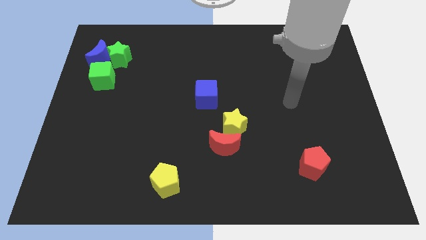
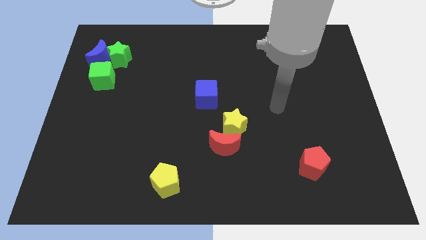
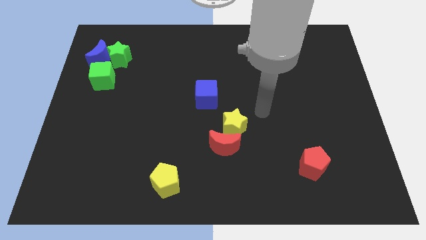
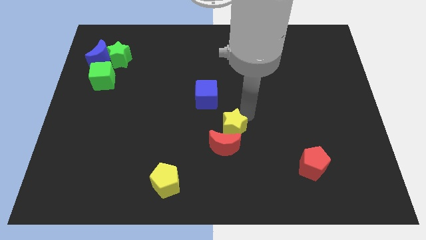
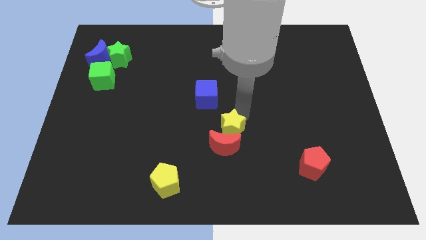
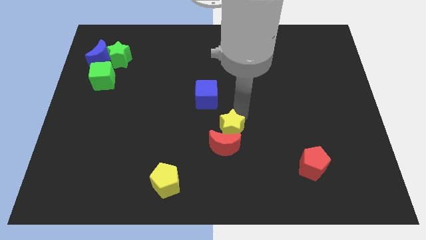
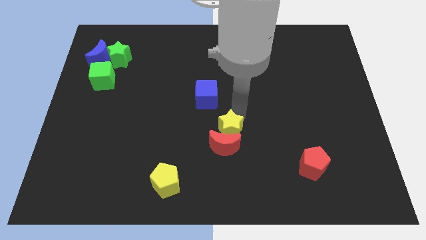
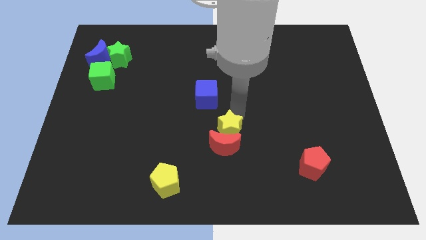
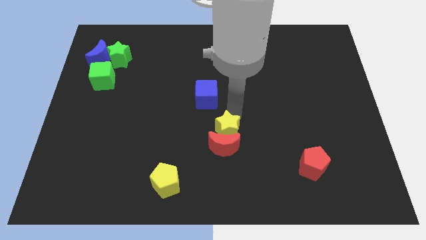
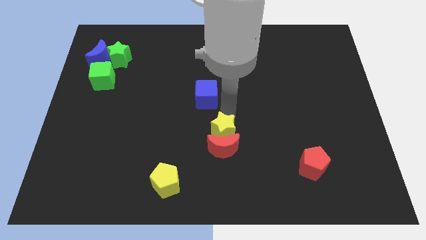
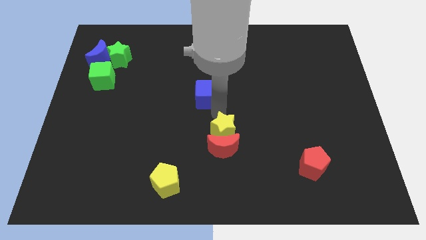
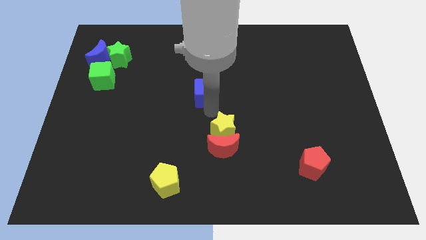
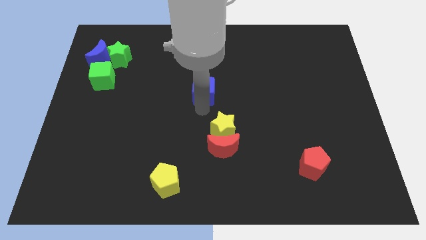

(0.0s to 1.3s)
push the yellow star into the red moon

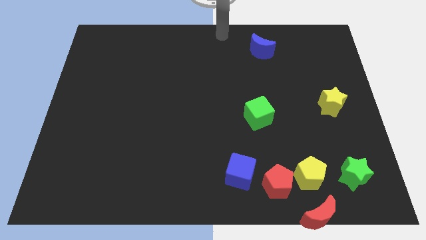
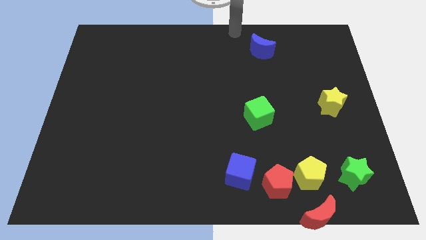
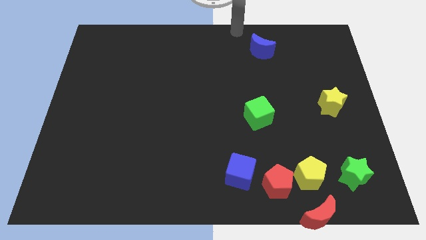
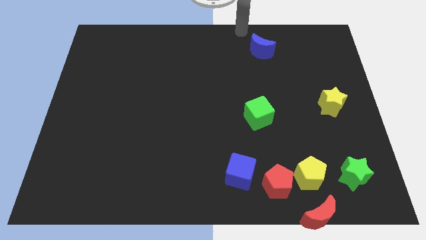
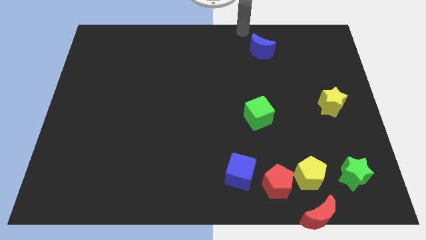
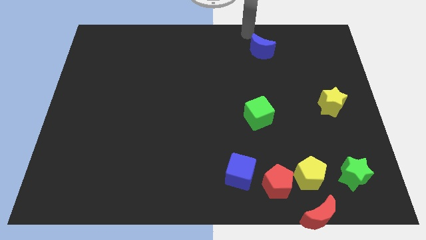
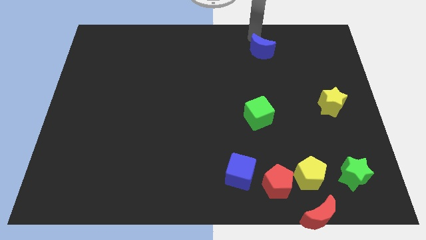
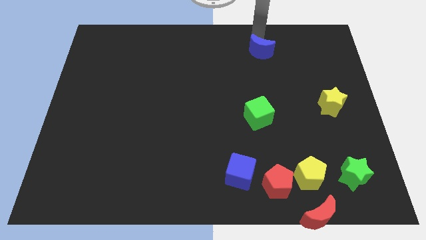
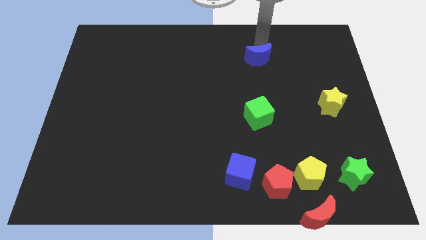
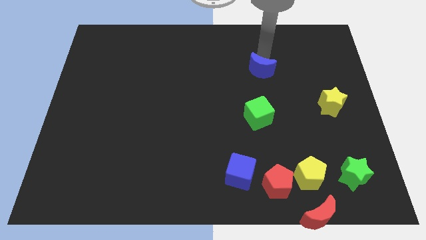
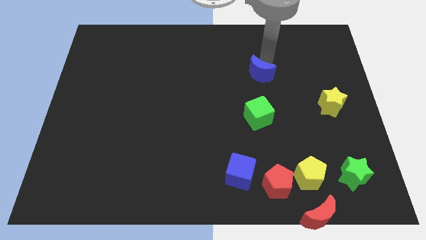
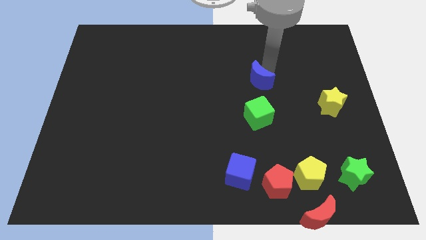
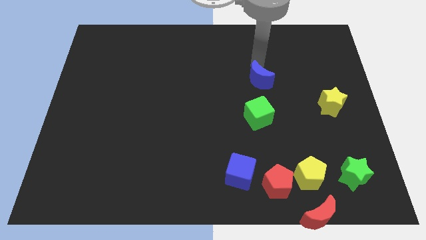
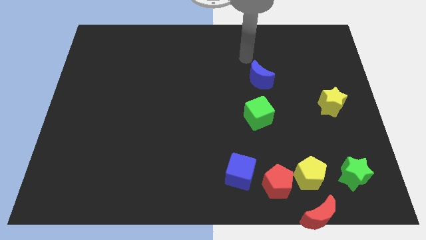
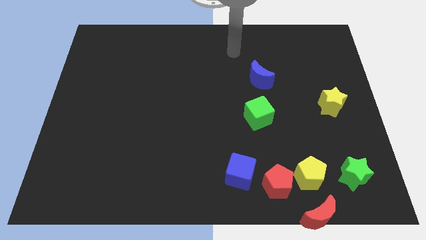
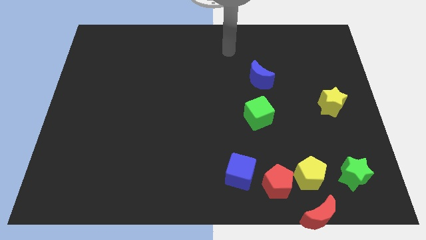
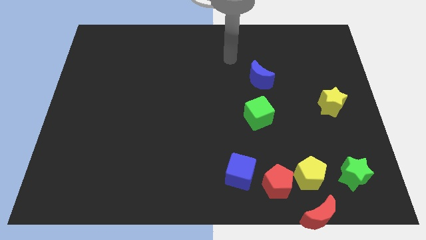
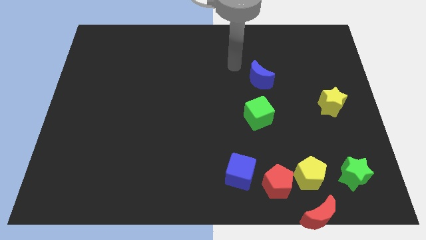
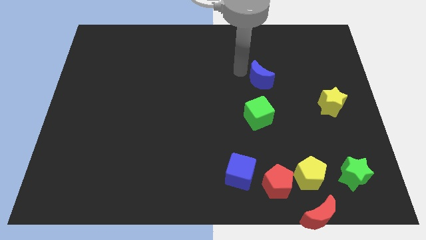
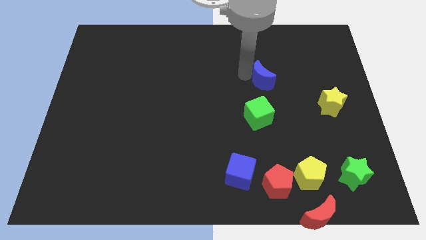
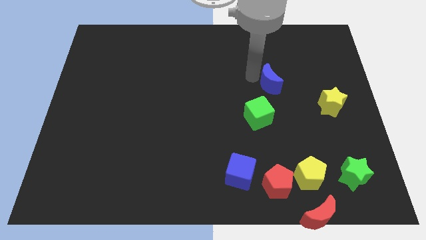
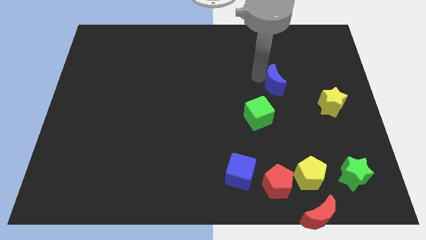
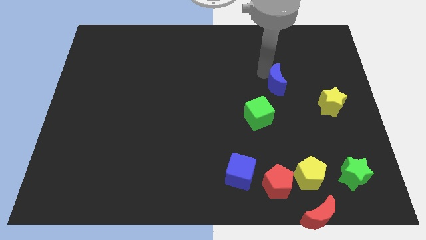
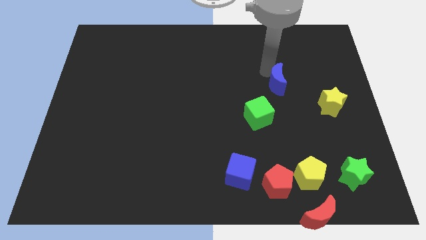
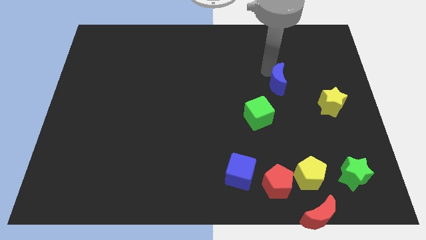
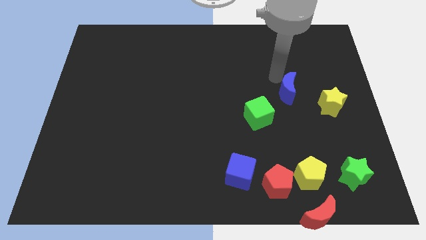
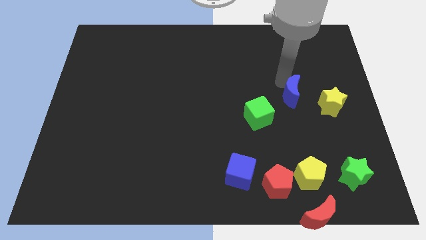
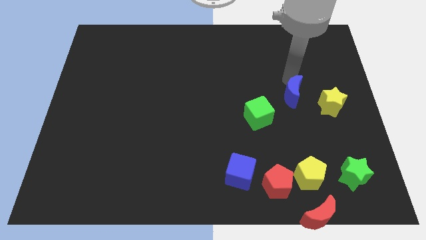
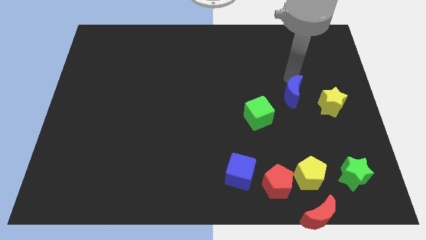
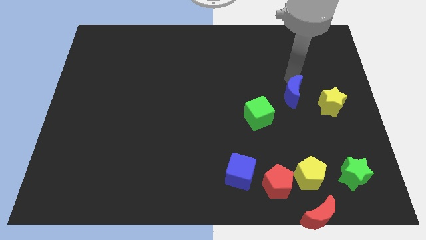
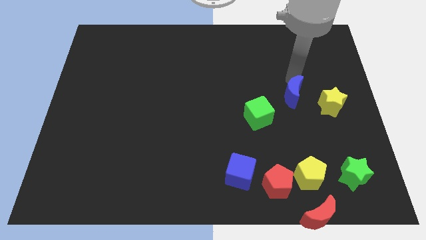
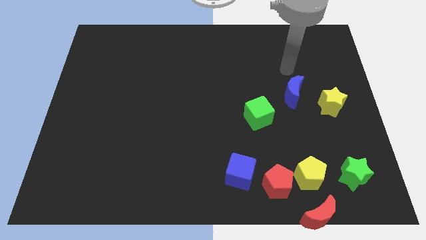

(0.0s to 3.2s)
move the blue moon at the top left side of the yellow star

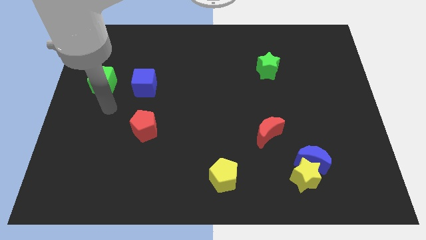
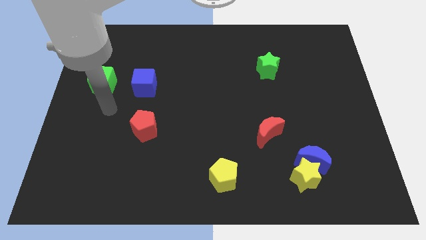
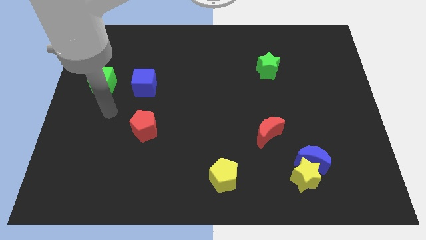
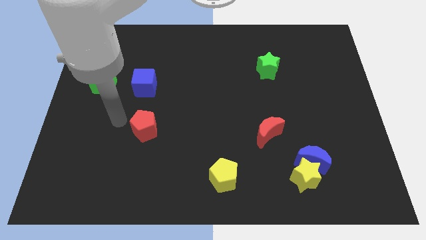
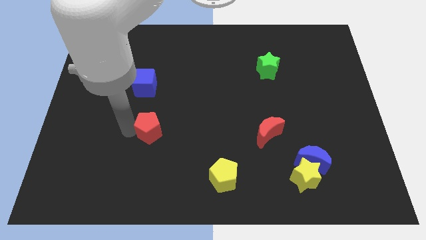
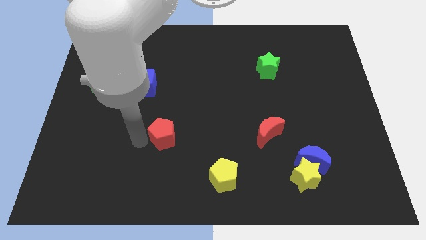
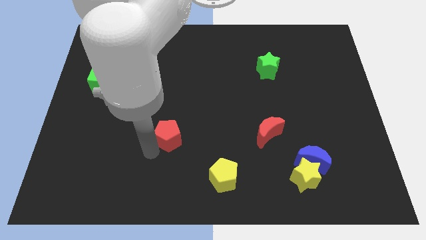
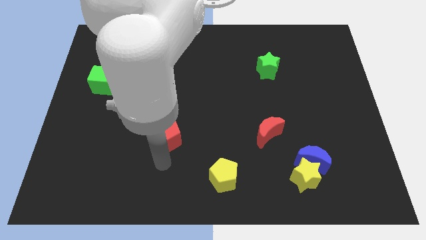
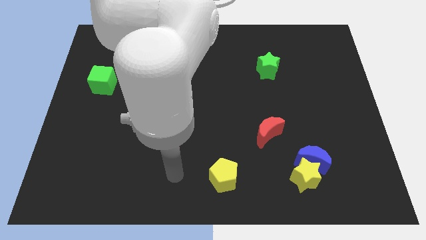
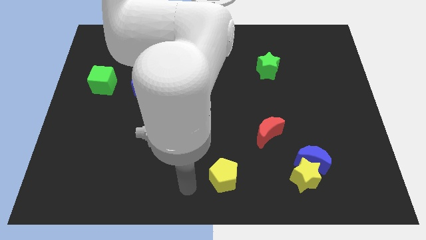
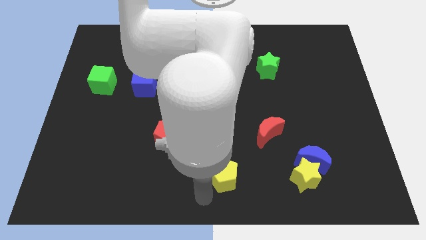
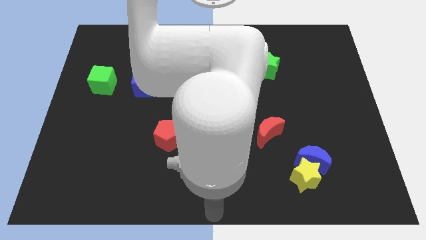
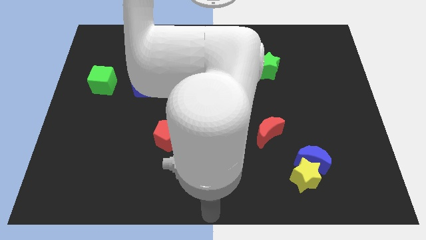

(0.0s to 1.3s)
move the red pentagon slightly right

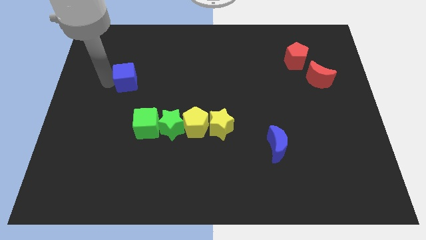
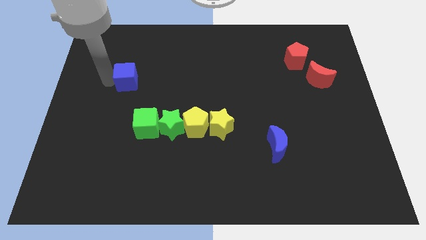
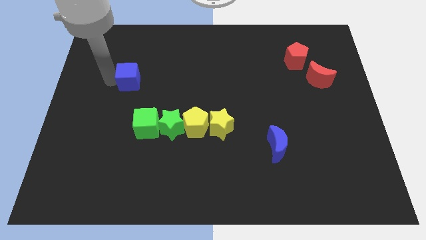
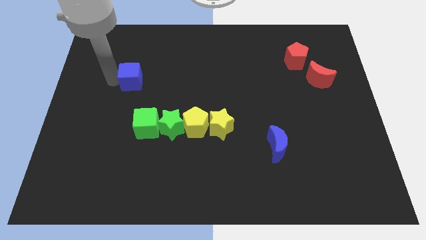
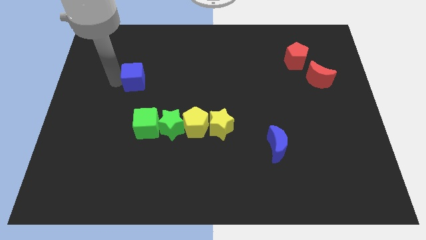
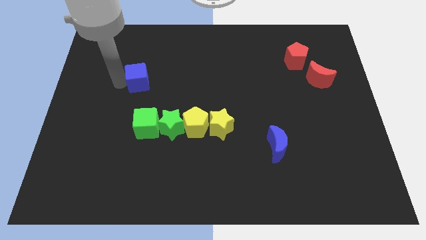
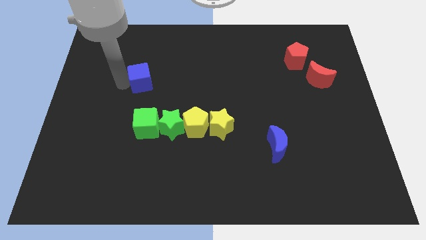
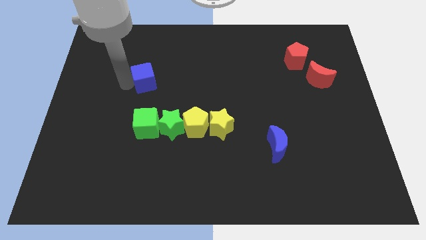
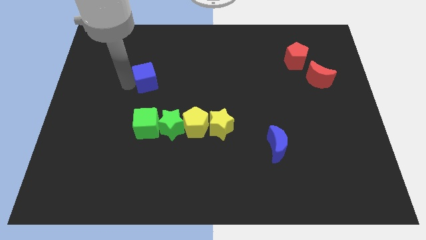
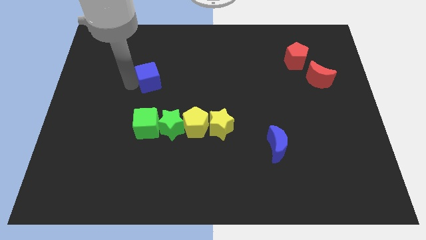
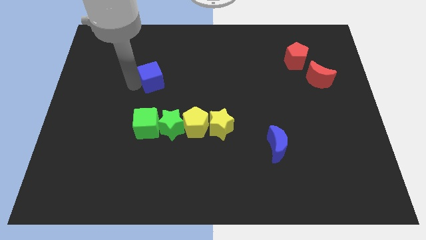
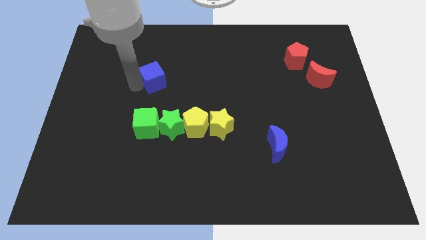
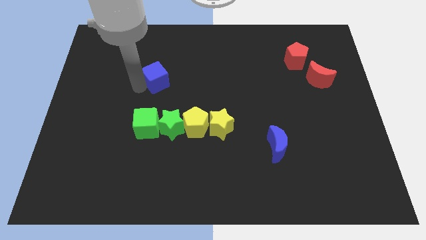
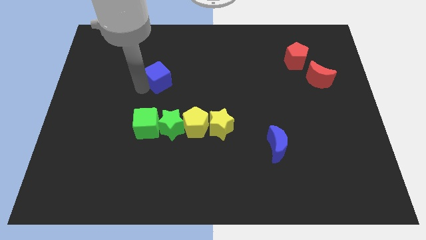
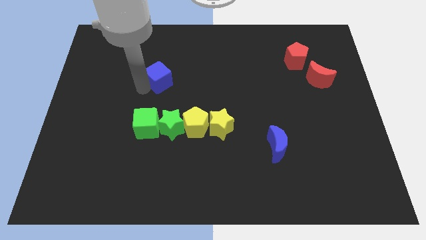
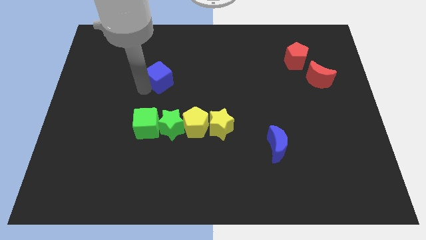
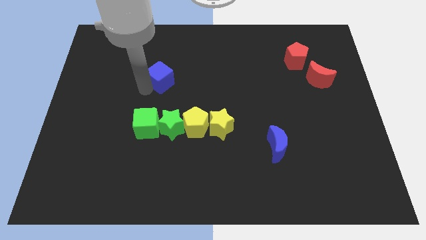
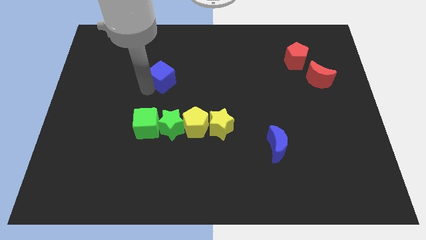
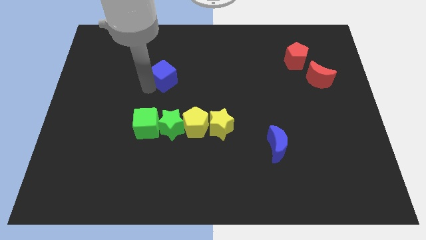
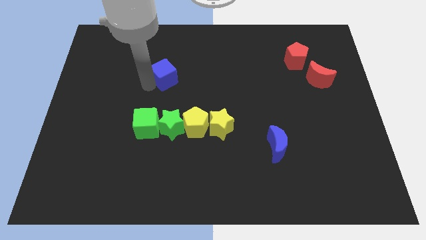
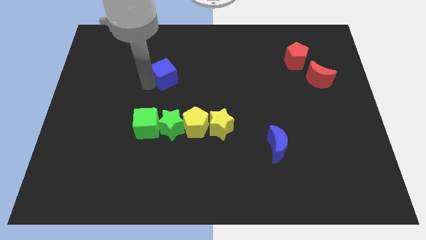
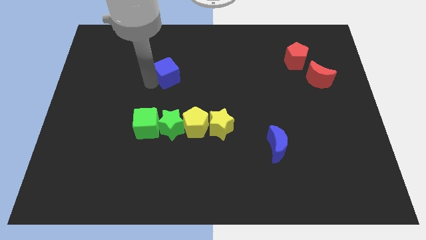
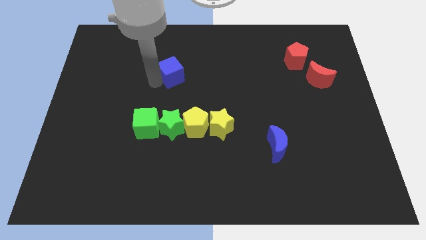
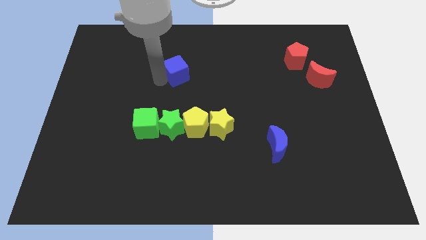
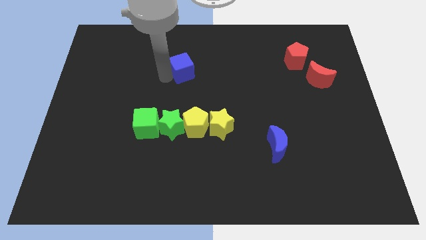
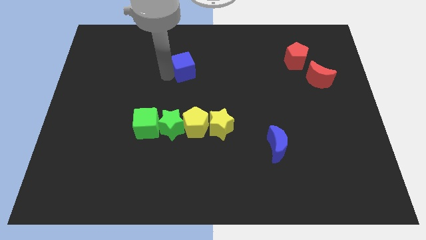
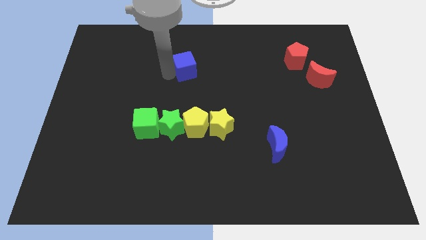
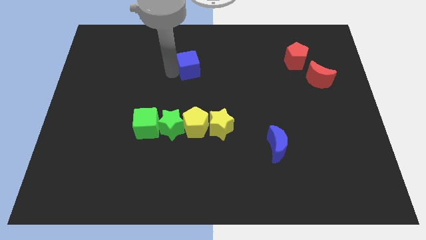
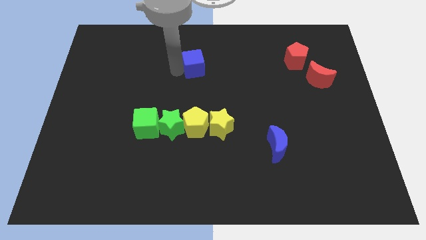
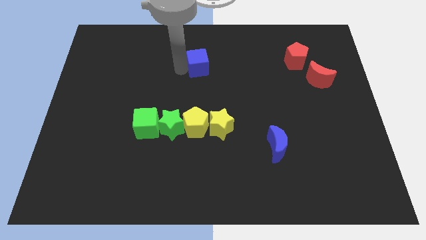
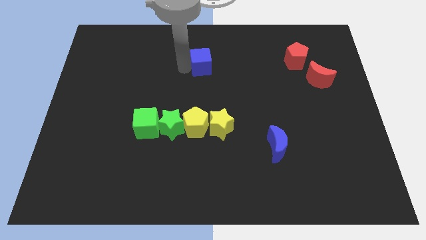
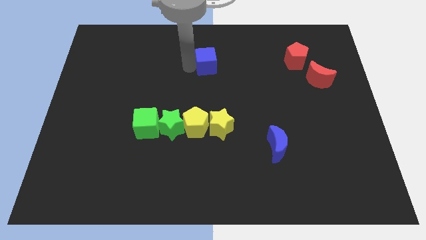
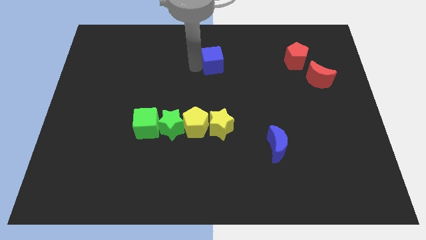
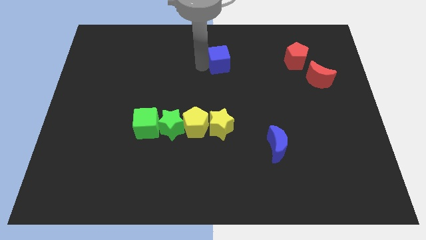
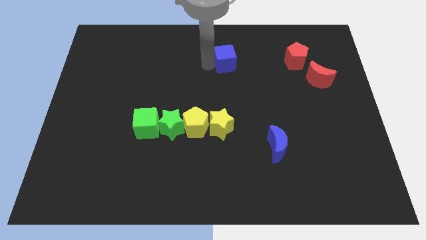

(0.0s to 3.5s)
place the blue cube vertically above the yellow star
